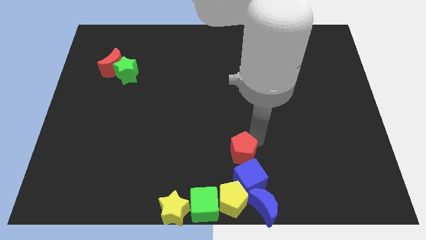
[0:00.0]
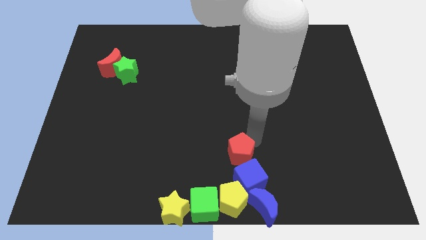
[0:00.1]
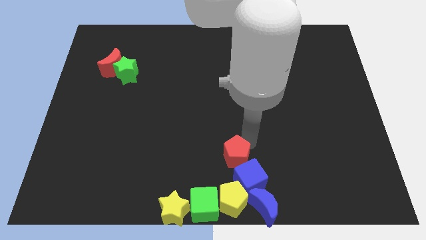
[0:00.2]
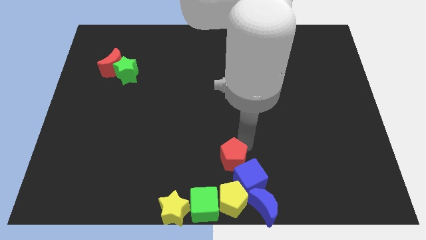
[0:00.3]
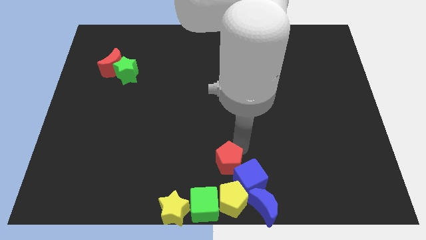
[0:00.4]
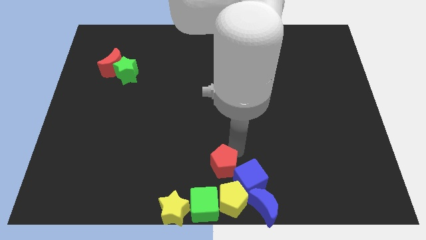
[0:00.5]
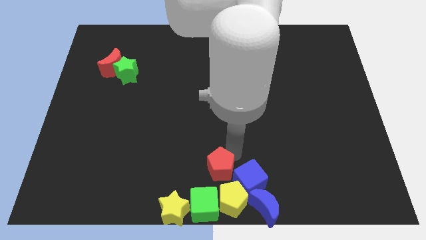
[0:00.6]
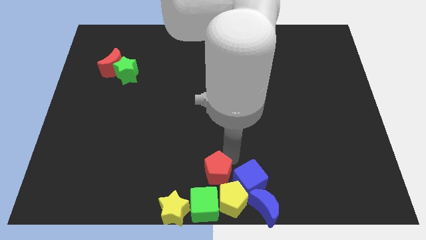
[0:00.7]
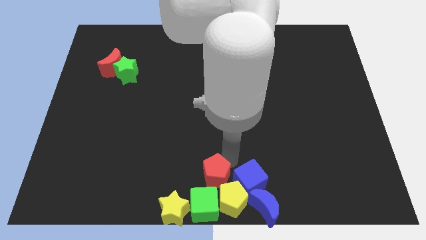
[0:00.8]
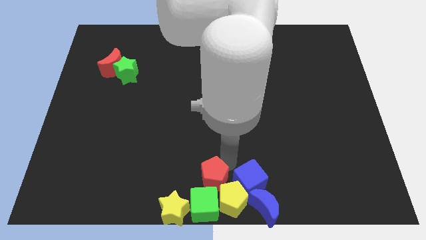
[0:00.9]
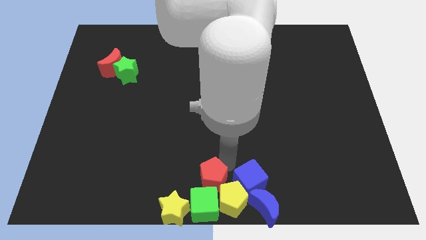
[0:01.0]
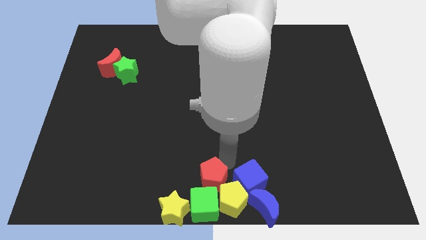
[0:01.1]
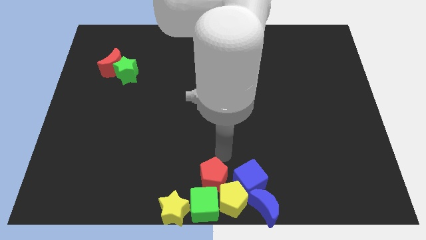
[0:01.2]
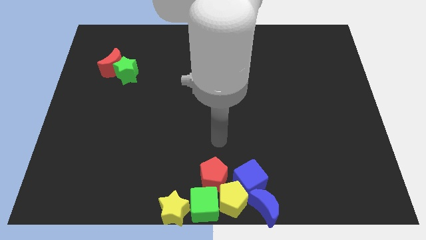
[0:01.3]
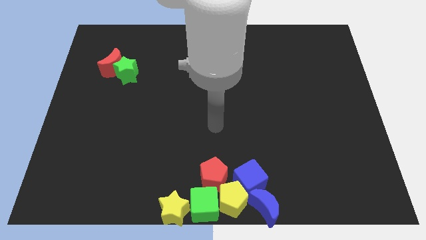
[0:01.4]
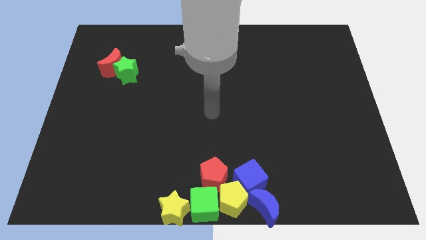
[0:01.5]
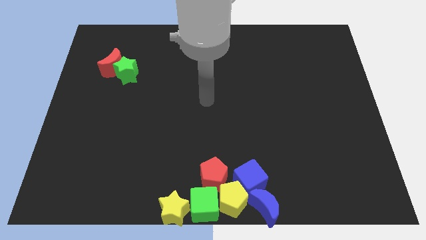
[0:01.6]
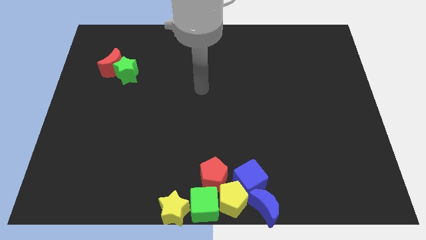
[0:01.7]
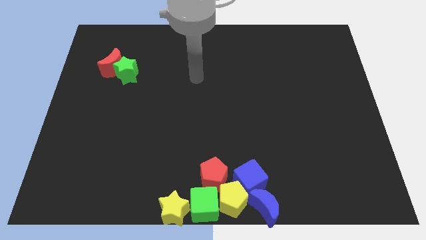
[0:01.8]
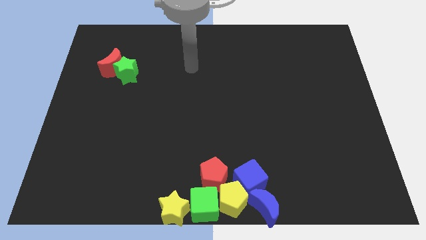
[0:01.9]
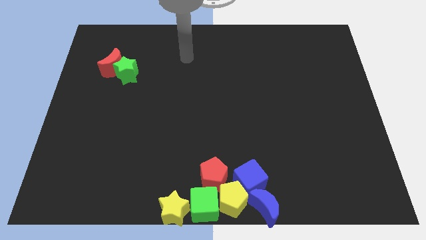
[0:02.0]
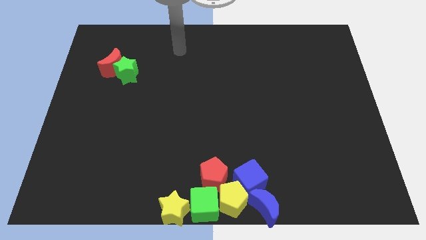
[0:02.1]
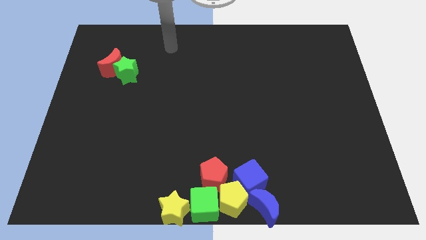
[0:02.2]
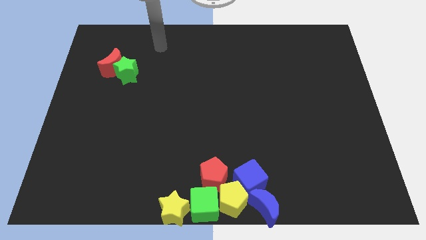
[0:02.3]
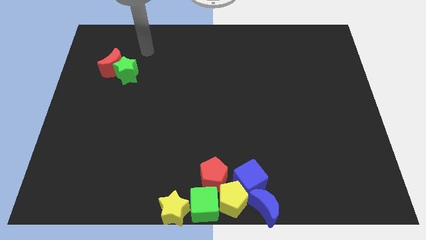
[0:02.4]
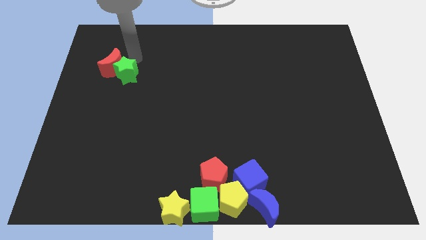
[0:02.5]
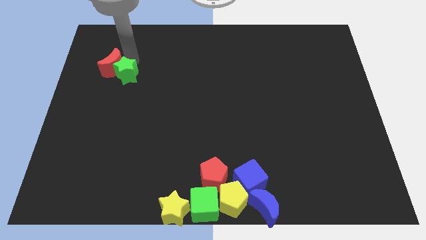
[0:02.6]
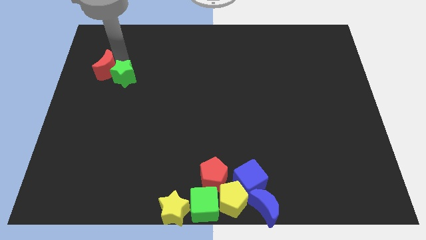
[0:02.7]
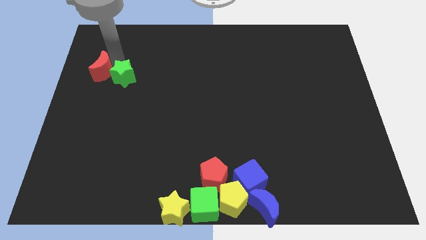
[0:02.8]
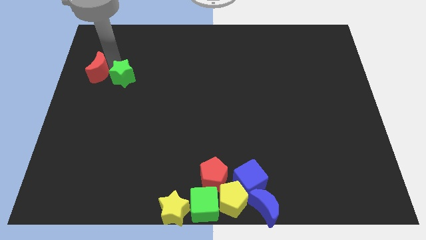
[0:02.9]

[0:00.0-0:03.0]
push red pentagon away from the blue cube

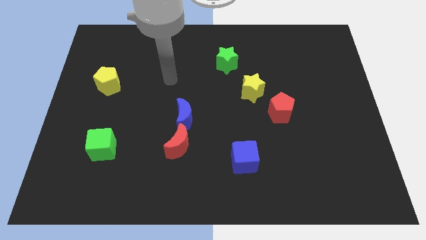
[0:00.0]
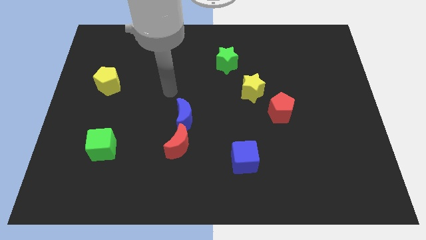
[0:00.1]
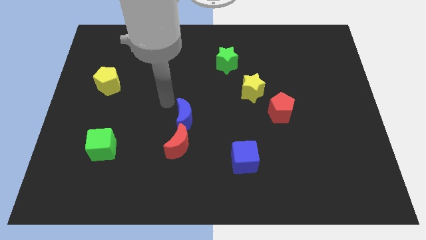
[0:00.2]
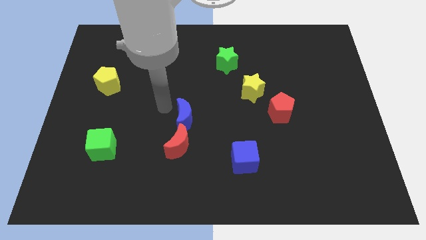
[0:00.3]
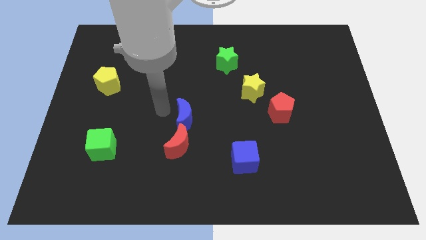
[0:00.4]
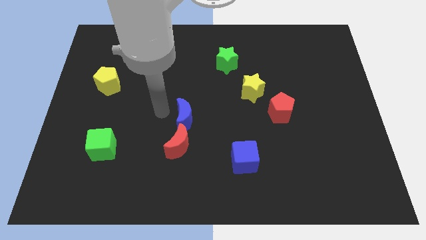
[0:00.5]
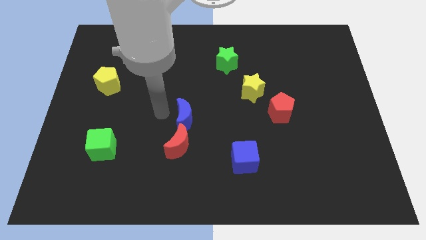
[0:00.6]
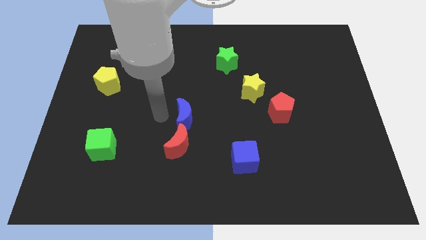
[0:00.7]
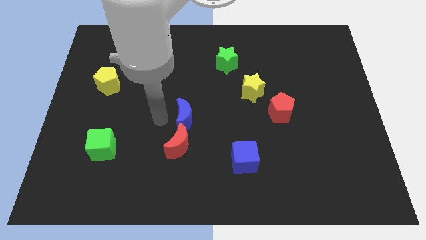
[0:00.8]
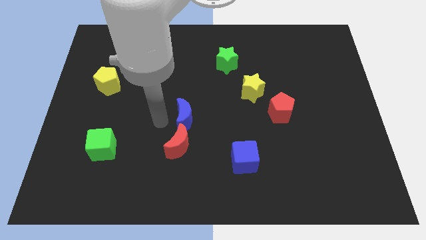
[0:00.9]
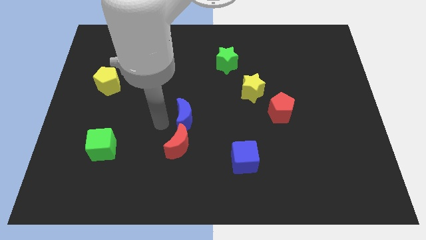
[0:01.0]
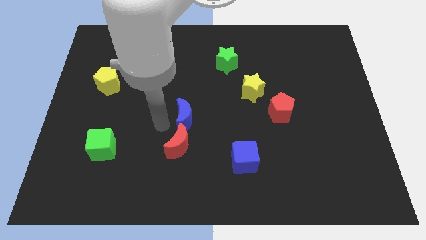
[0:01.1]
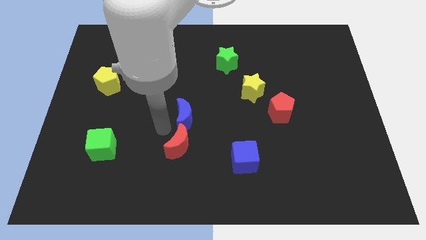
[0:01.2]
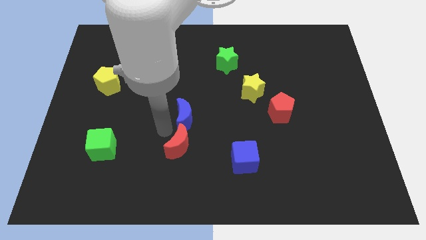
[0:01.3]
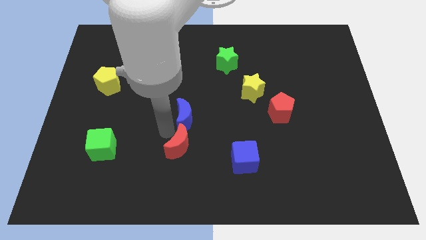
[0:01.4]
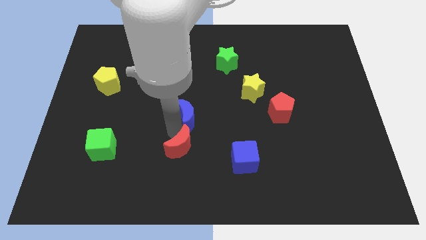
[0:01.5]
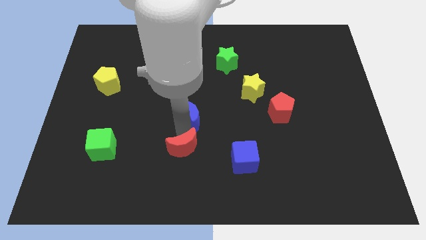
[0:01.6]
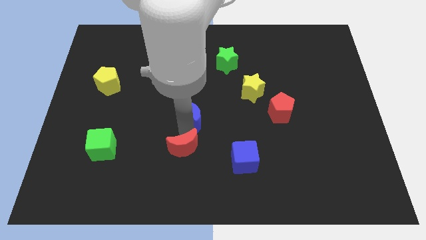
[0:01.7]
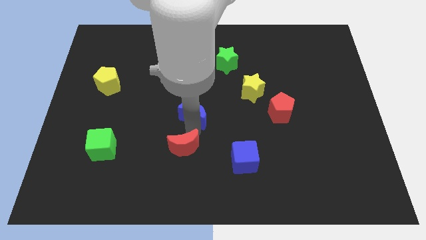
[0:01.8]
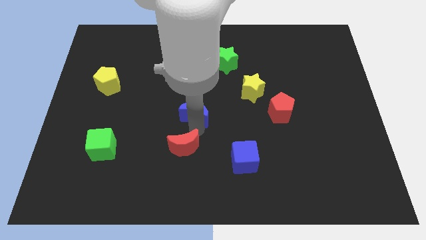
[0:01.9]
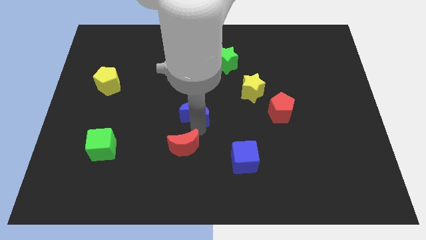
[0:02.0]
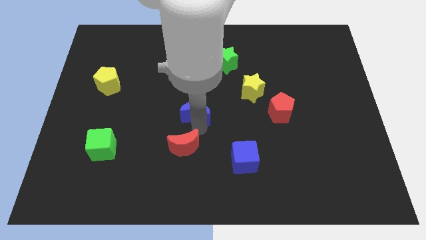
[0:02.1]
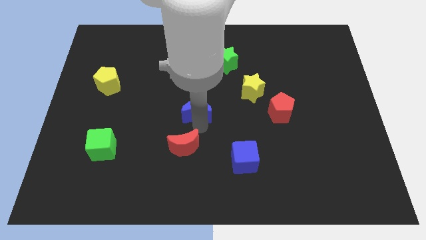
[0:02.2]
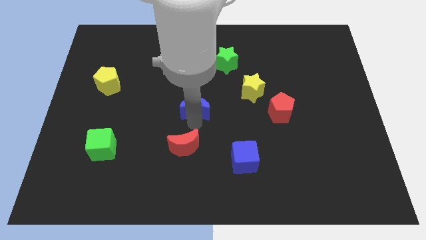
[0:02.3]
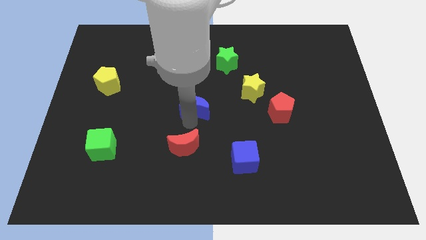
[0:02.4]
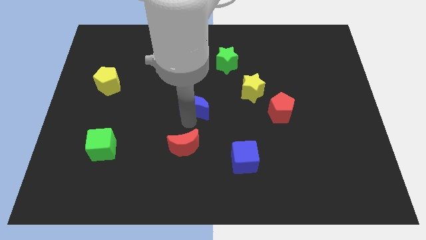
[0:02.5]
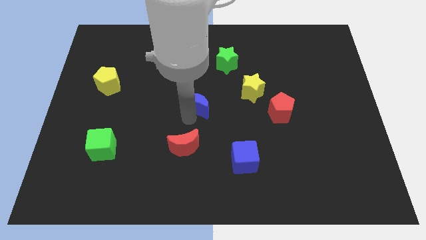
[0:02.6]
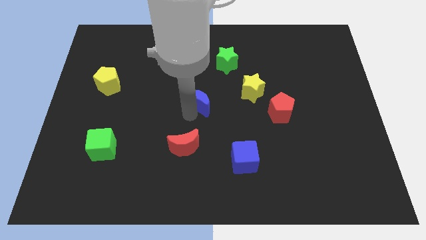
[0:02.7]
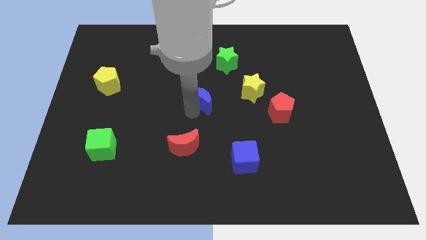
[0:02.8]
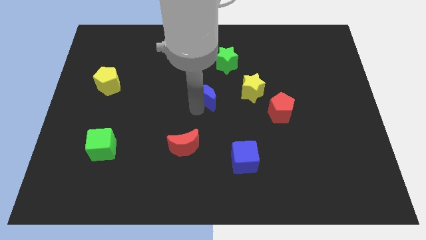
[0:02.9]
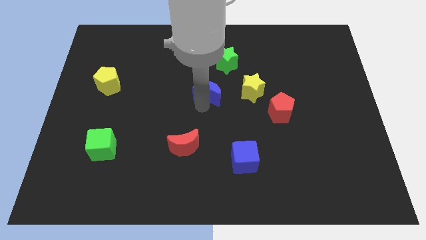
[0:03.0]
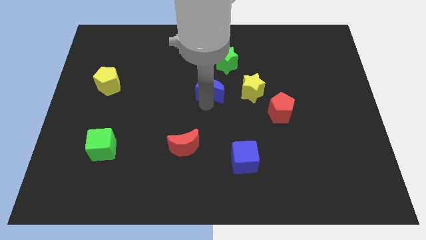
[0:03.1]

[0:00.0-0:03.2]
separate blue crescent from the red crescent

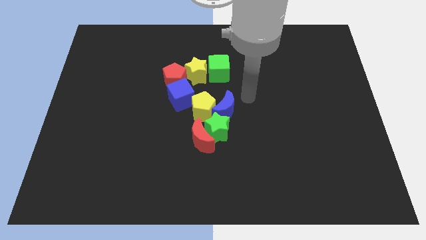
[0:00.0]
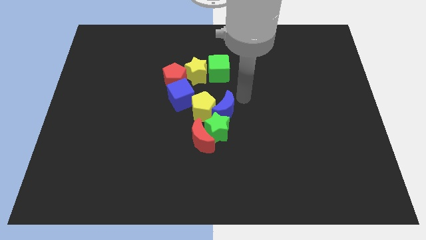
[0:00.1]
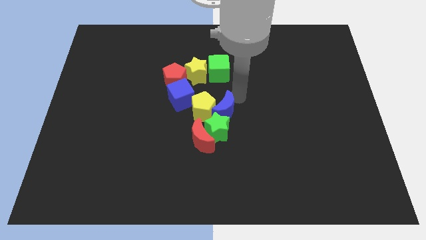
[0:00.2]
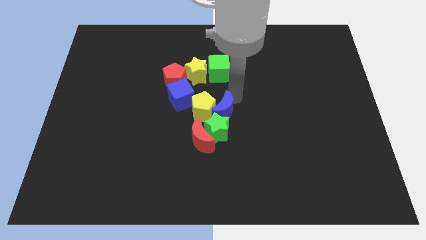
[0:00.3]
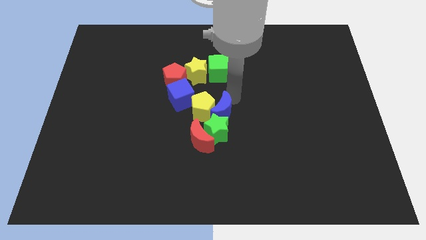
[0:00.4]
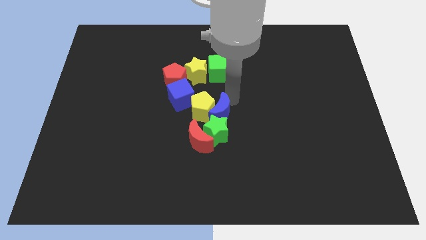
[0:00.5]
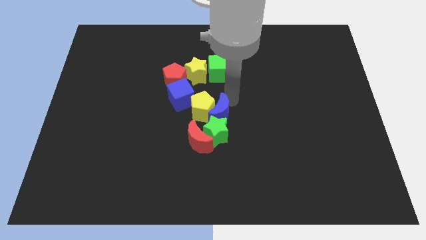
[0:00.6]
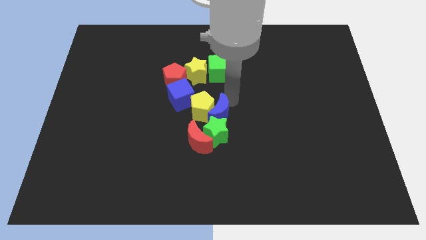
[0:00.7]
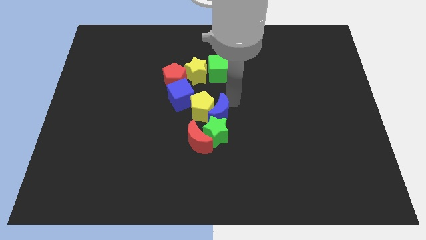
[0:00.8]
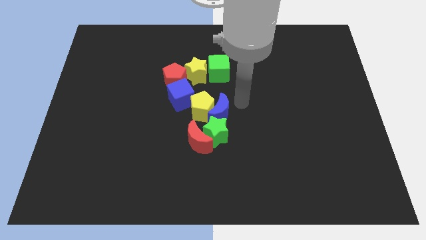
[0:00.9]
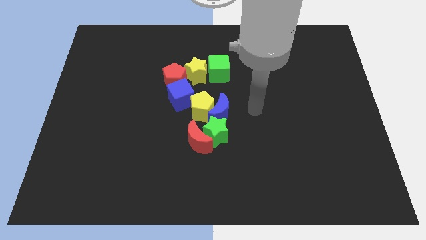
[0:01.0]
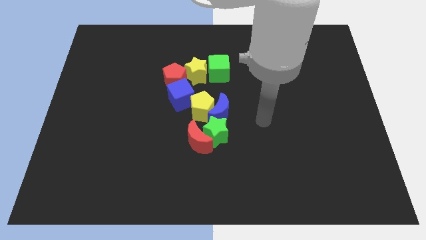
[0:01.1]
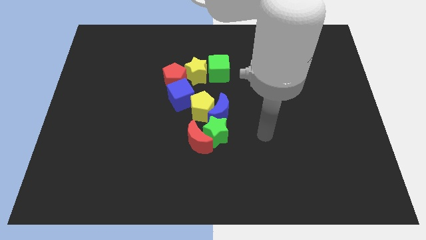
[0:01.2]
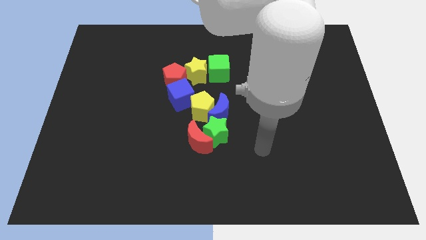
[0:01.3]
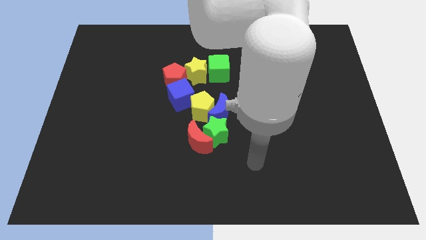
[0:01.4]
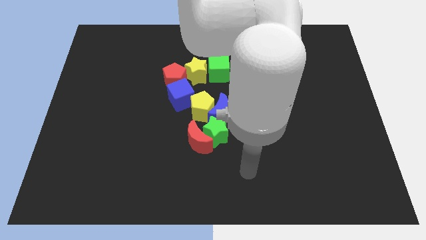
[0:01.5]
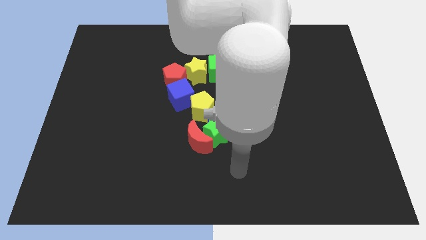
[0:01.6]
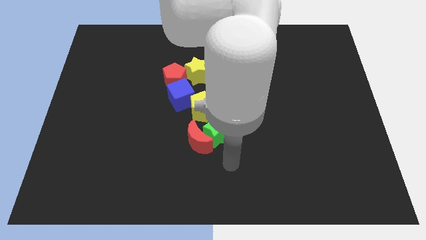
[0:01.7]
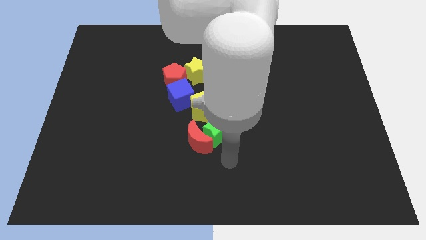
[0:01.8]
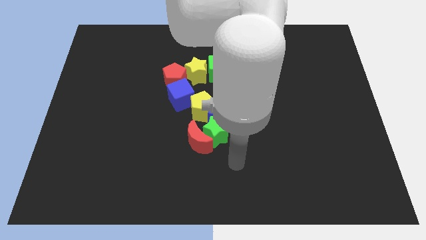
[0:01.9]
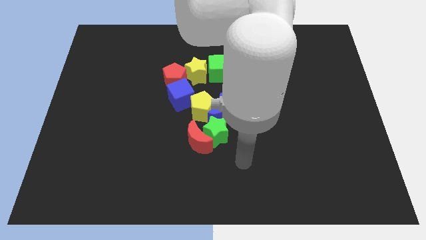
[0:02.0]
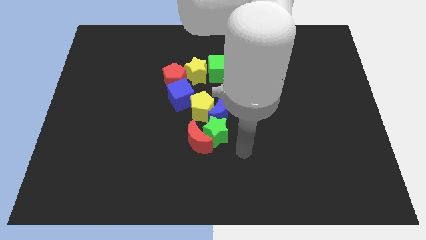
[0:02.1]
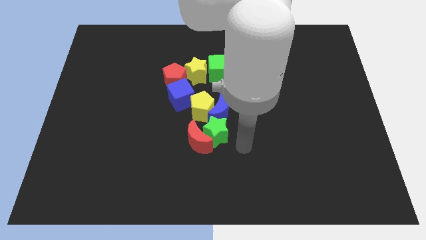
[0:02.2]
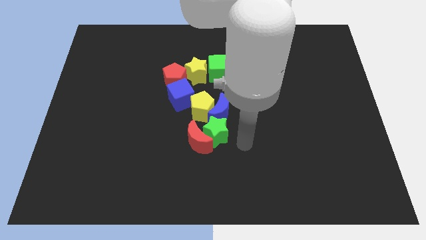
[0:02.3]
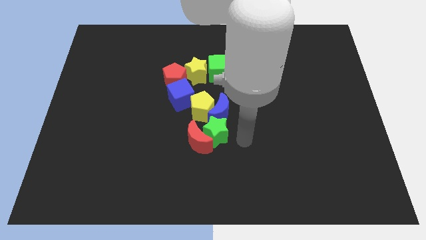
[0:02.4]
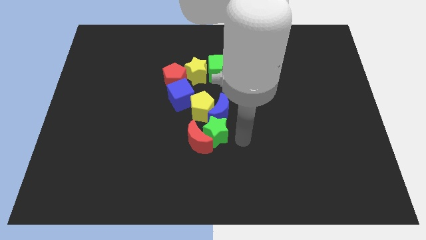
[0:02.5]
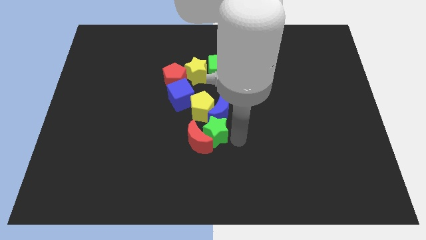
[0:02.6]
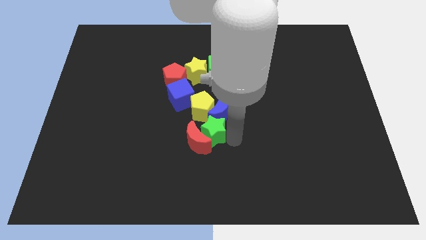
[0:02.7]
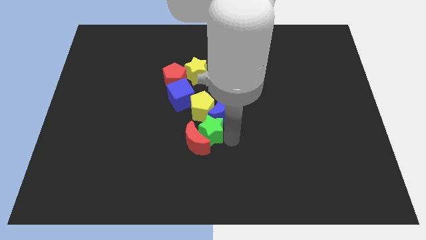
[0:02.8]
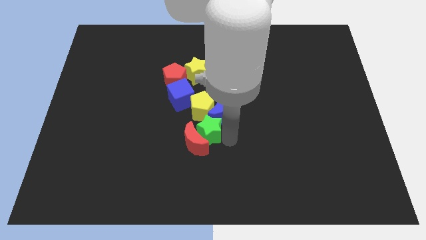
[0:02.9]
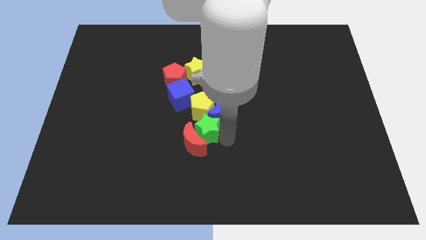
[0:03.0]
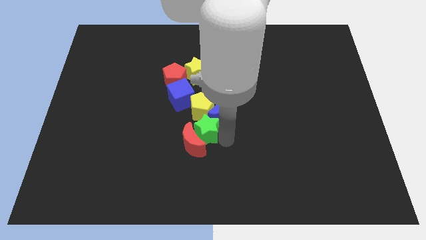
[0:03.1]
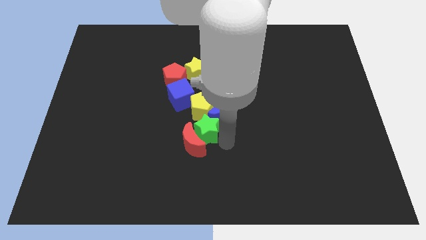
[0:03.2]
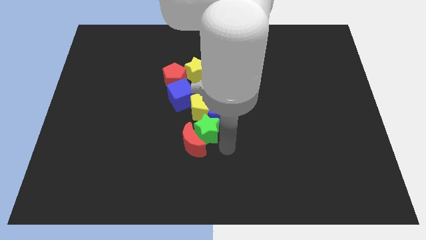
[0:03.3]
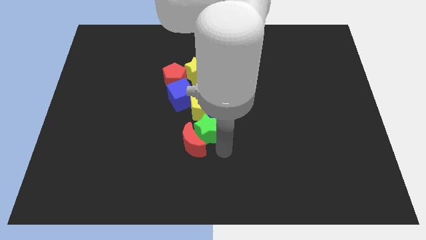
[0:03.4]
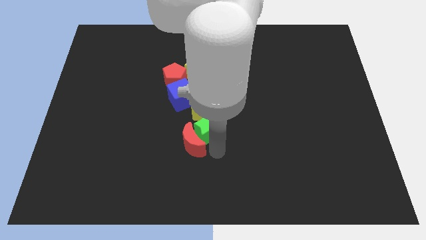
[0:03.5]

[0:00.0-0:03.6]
push the green star and red moon towards the left side of the board
